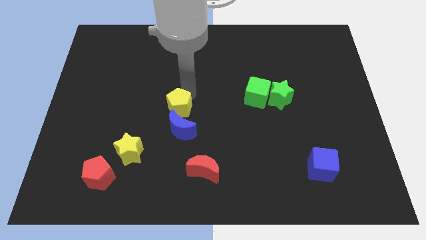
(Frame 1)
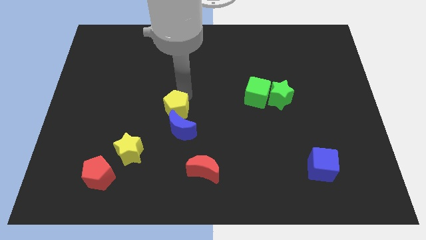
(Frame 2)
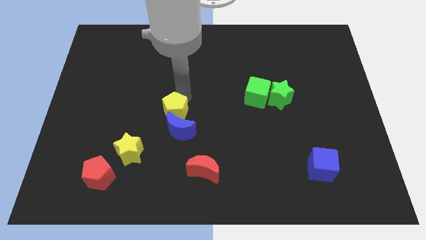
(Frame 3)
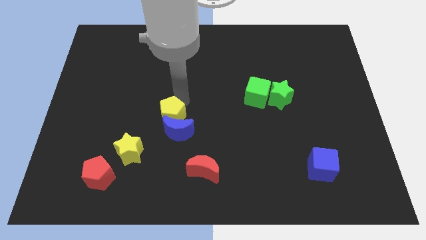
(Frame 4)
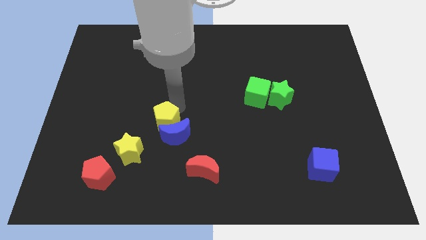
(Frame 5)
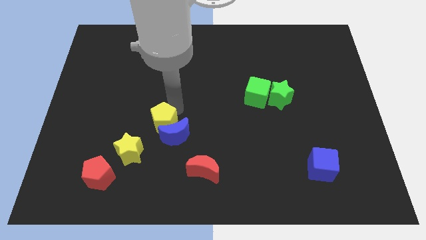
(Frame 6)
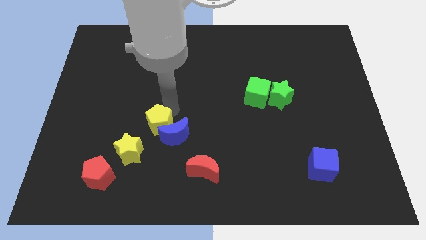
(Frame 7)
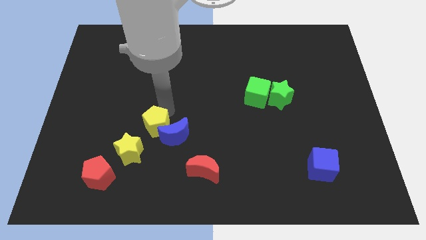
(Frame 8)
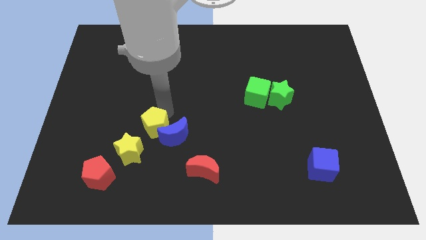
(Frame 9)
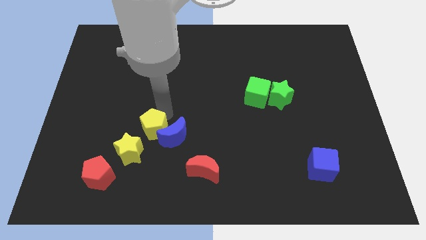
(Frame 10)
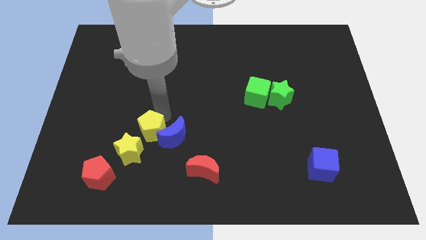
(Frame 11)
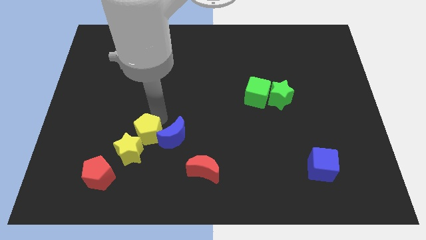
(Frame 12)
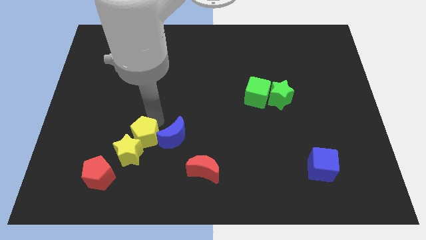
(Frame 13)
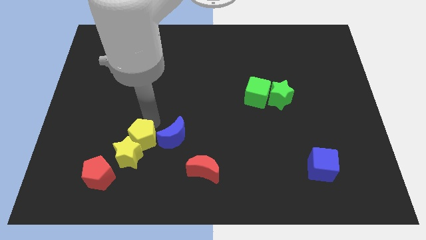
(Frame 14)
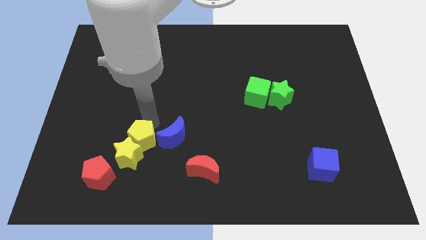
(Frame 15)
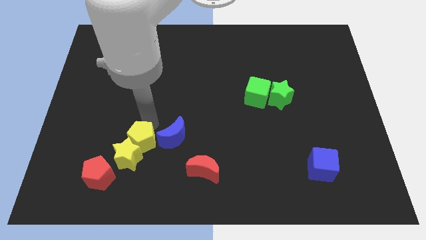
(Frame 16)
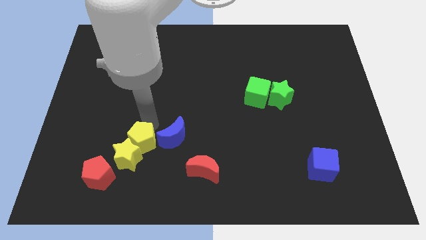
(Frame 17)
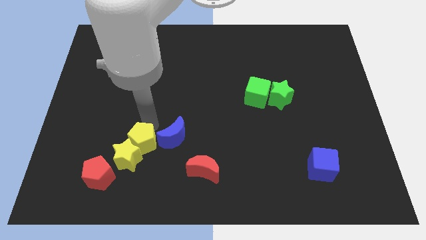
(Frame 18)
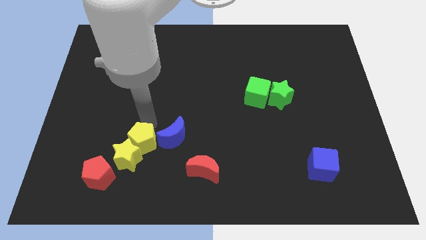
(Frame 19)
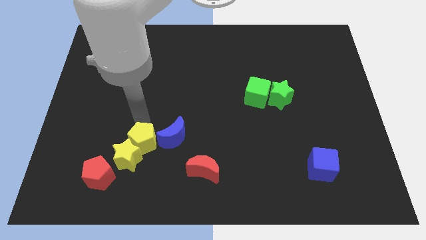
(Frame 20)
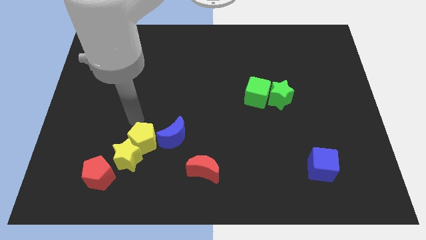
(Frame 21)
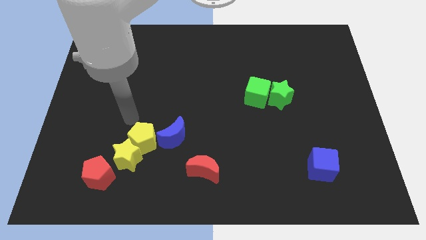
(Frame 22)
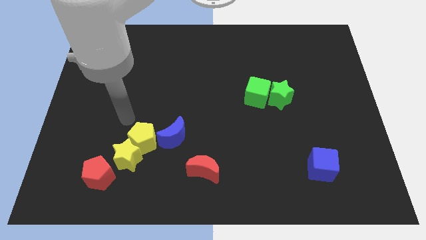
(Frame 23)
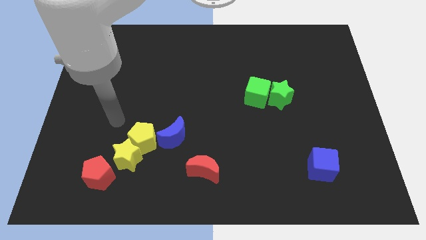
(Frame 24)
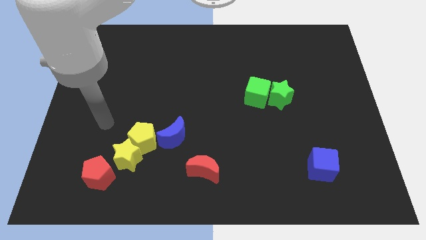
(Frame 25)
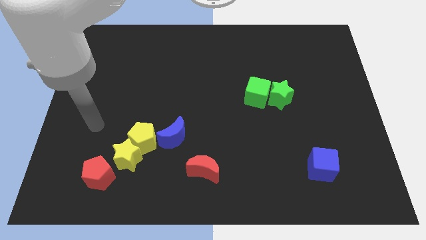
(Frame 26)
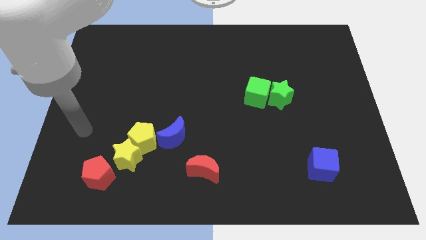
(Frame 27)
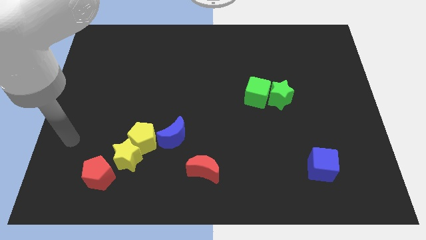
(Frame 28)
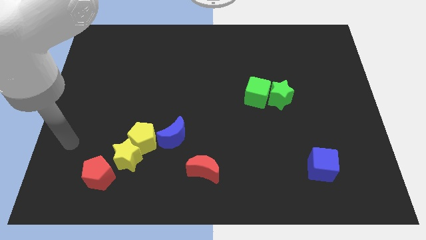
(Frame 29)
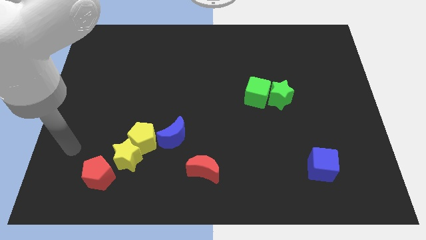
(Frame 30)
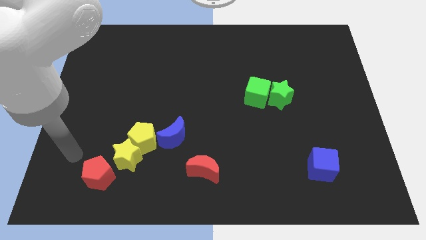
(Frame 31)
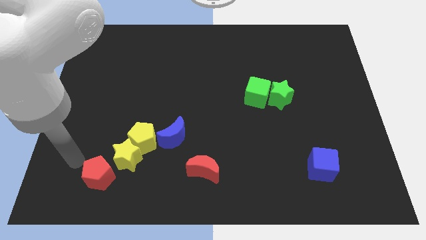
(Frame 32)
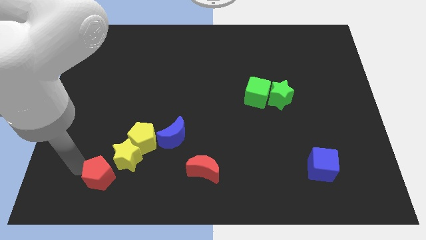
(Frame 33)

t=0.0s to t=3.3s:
place the arm to the left of the red pentagon

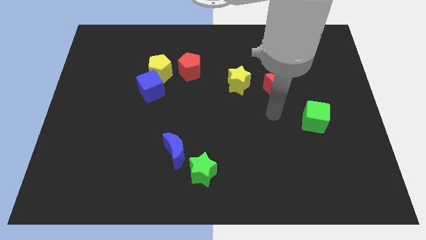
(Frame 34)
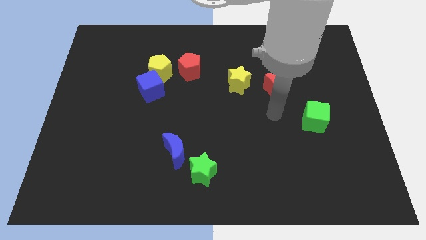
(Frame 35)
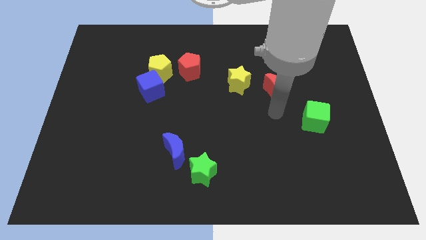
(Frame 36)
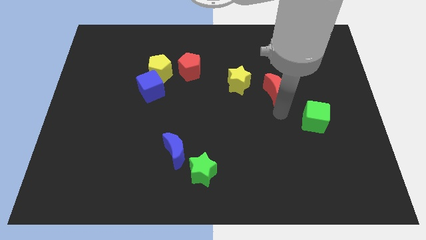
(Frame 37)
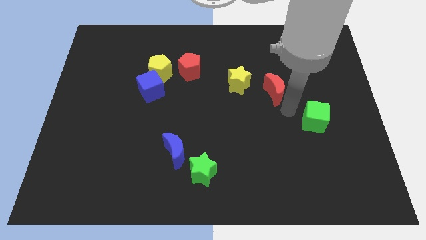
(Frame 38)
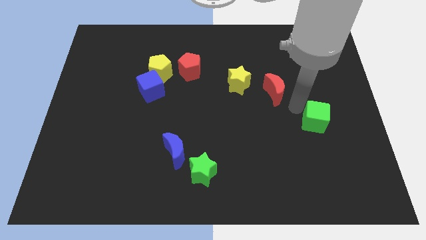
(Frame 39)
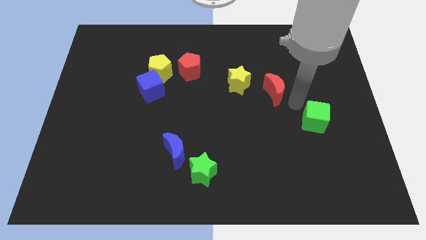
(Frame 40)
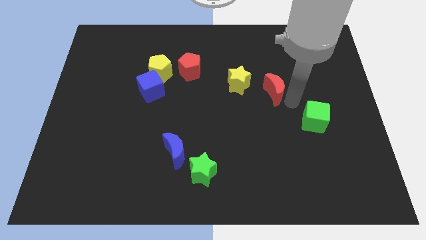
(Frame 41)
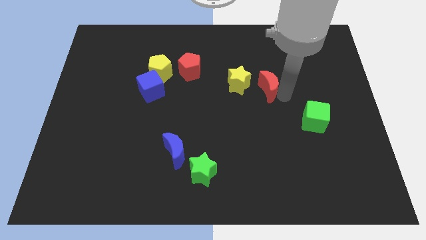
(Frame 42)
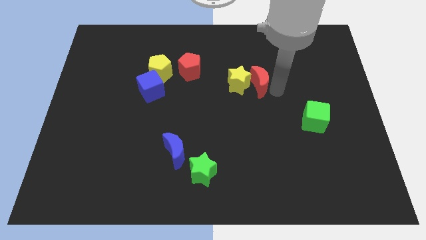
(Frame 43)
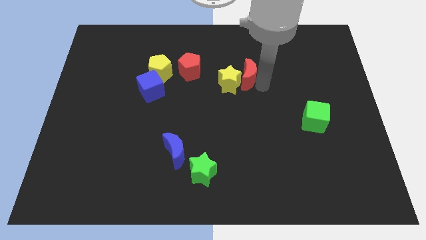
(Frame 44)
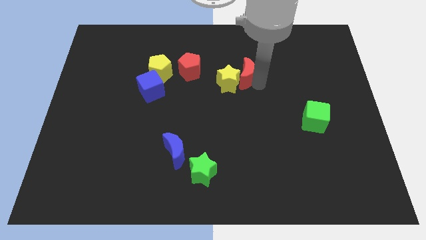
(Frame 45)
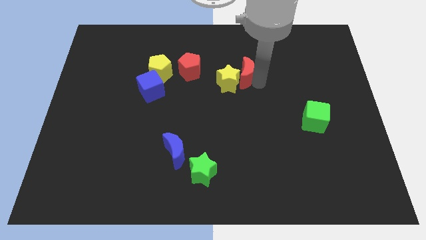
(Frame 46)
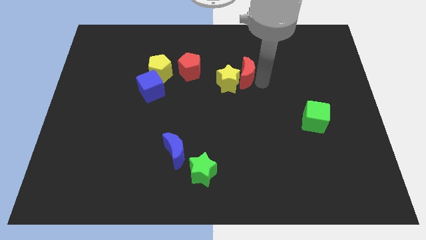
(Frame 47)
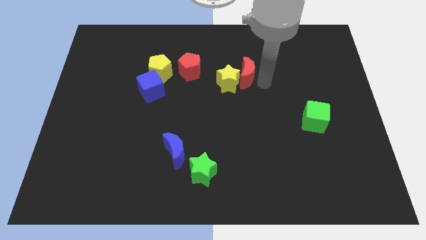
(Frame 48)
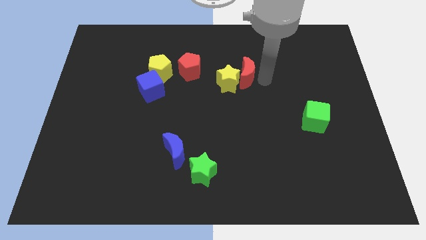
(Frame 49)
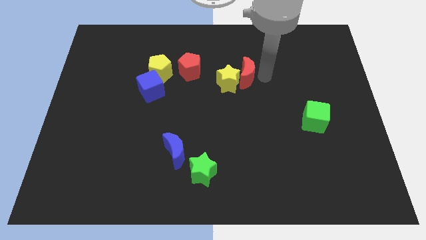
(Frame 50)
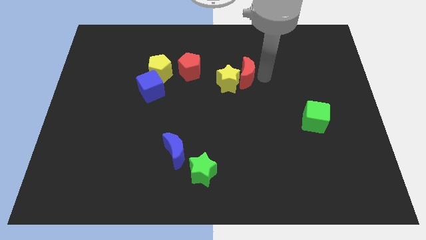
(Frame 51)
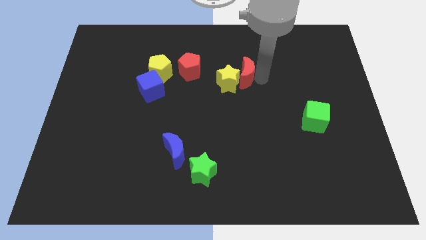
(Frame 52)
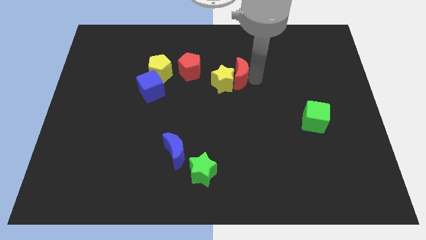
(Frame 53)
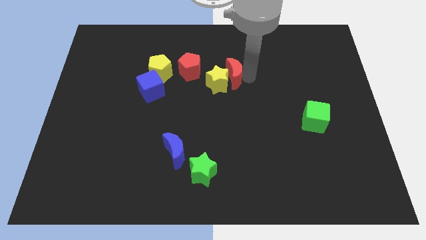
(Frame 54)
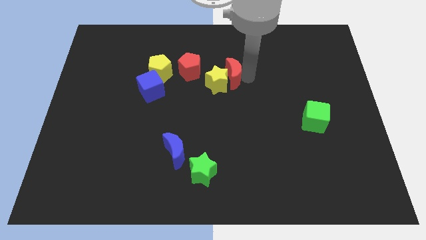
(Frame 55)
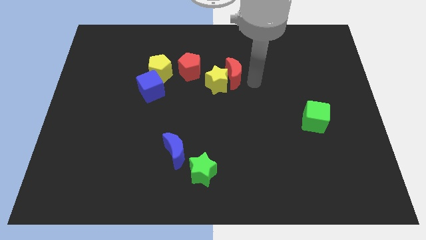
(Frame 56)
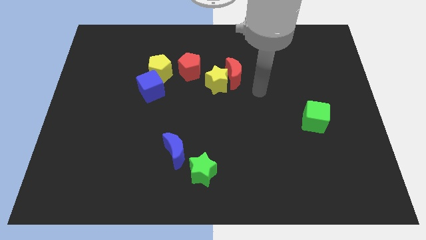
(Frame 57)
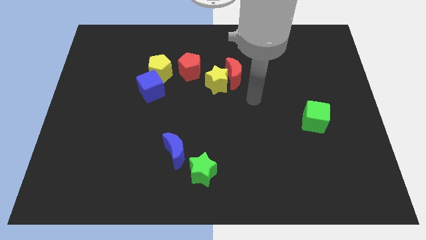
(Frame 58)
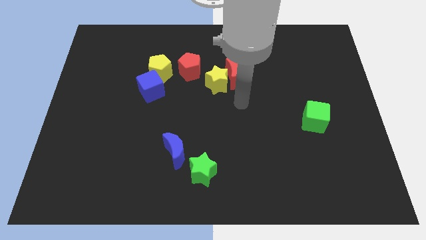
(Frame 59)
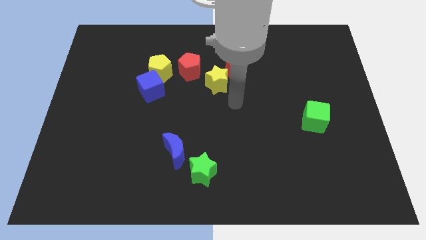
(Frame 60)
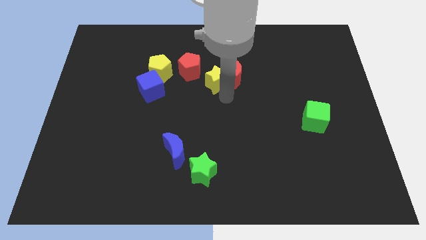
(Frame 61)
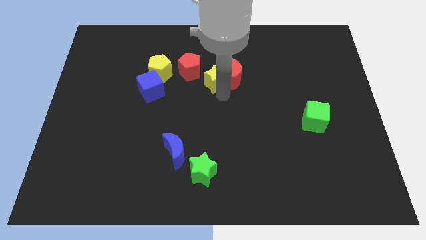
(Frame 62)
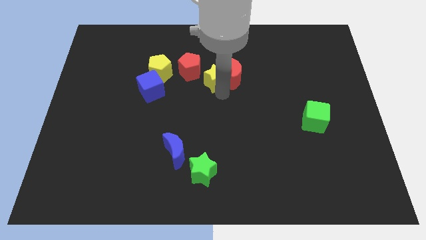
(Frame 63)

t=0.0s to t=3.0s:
push the yellow star with the red crescent

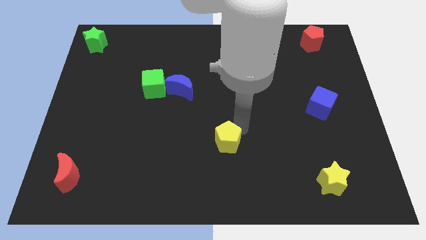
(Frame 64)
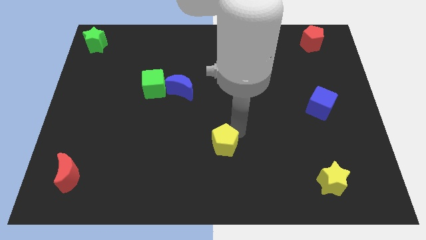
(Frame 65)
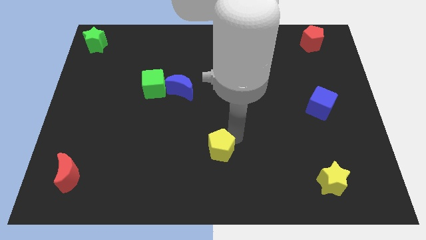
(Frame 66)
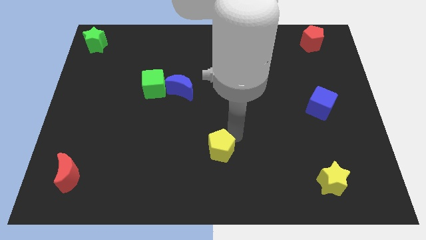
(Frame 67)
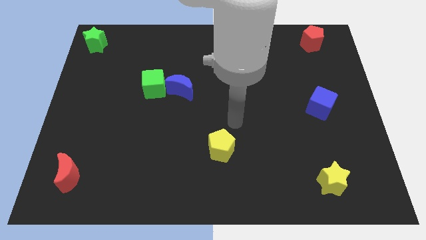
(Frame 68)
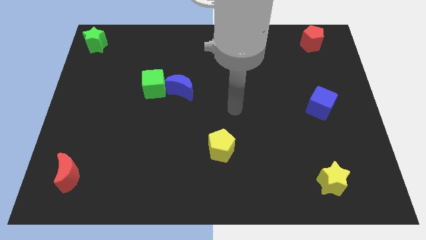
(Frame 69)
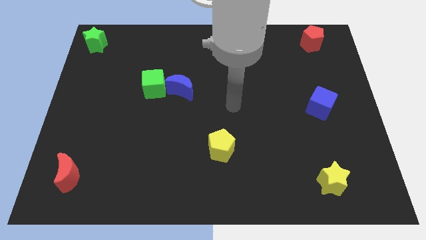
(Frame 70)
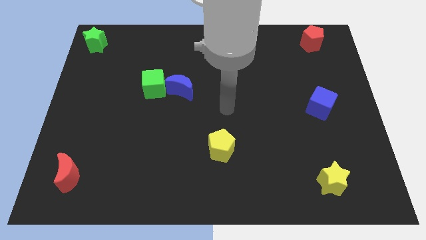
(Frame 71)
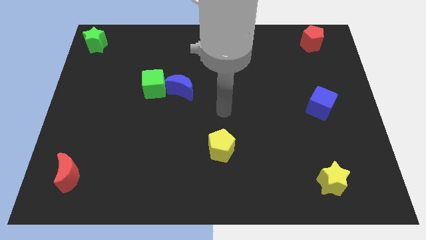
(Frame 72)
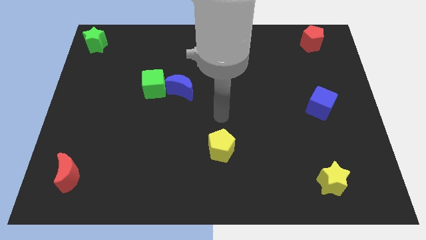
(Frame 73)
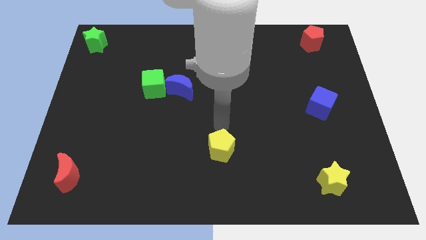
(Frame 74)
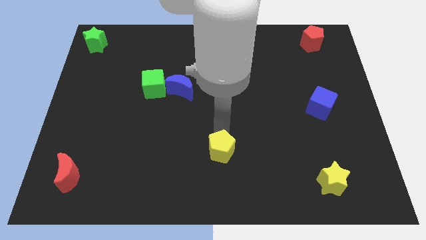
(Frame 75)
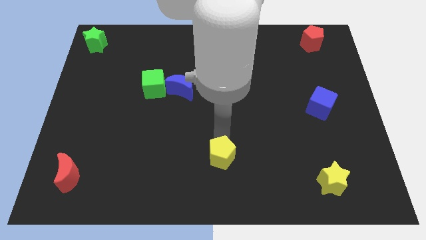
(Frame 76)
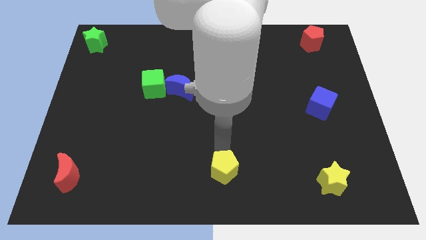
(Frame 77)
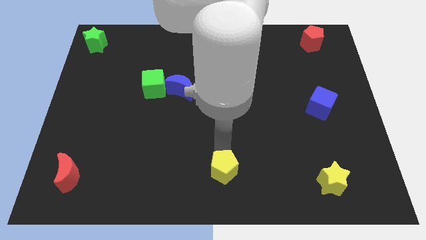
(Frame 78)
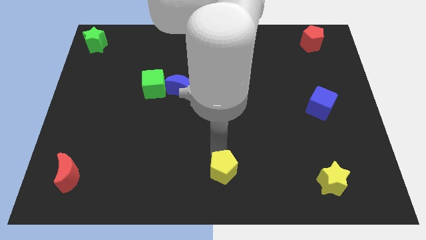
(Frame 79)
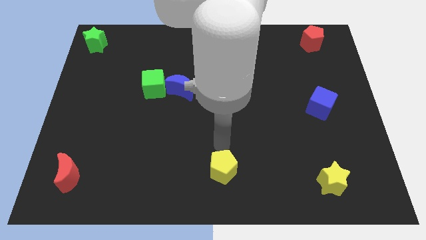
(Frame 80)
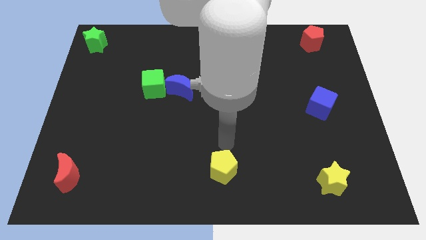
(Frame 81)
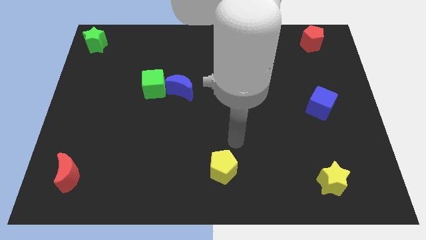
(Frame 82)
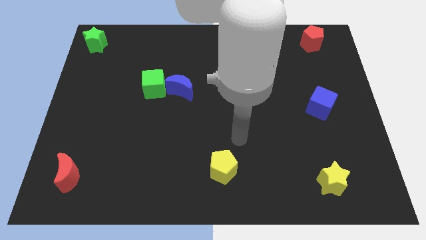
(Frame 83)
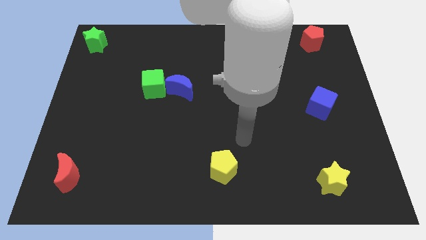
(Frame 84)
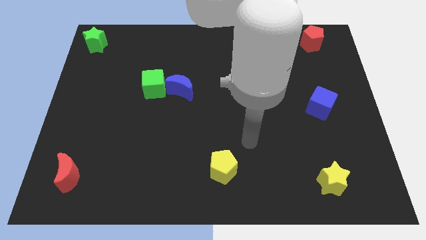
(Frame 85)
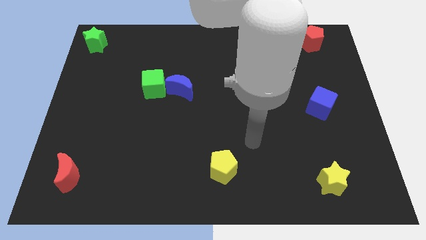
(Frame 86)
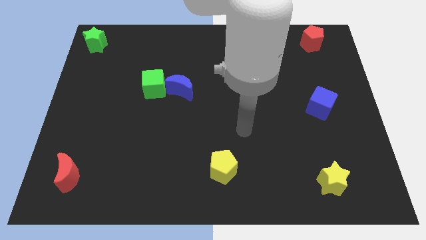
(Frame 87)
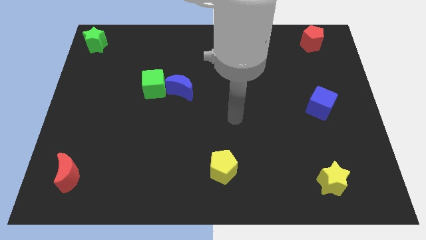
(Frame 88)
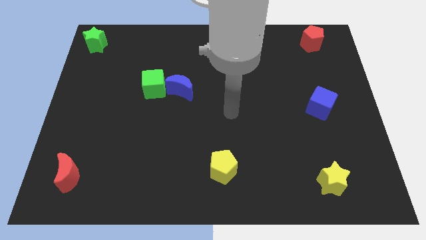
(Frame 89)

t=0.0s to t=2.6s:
push the yellow pentagon to the bottom centre of the board
